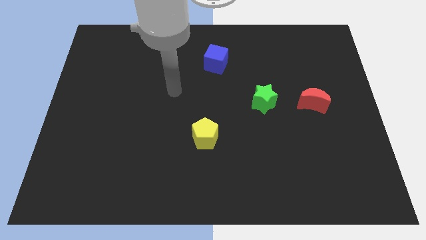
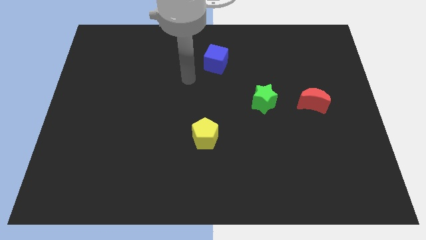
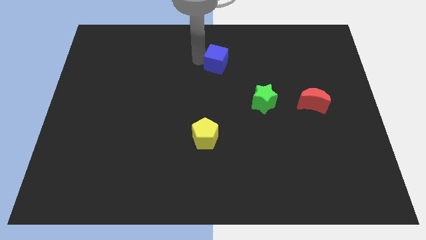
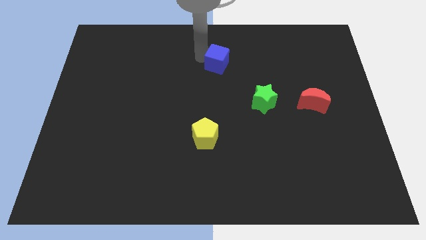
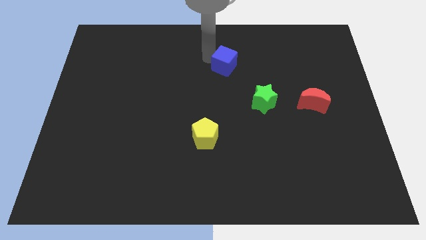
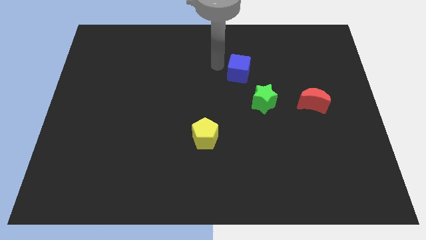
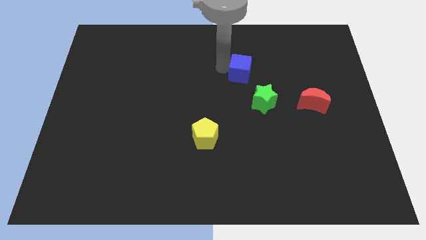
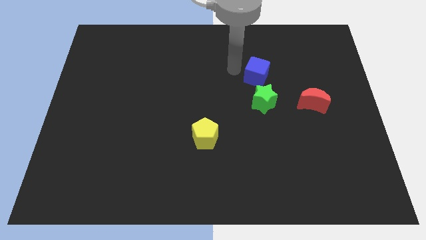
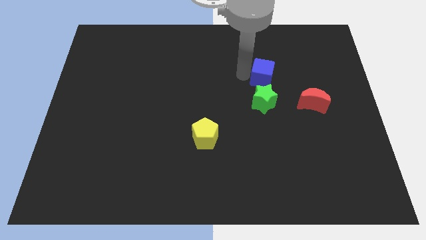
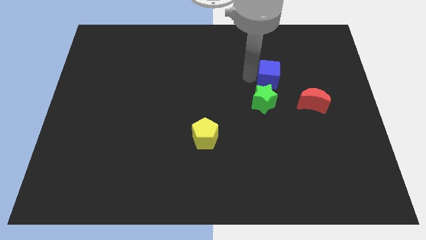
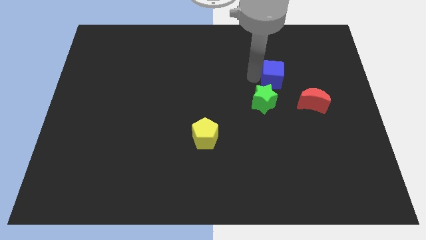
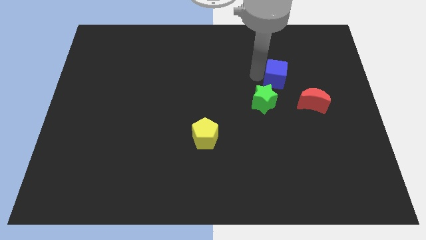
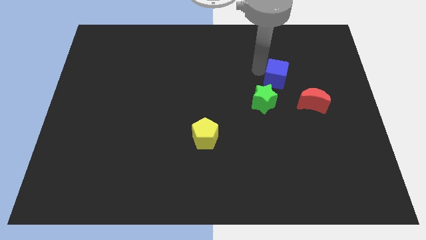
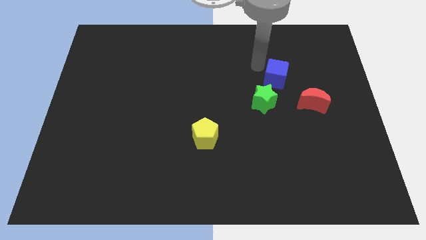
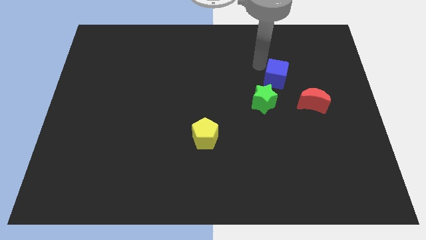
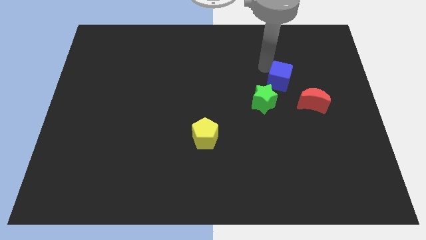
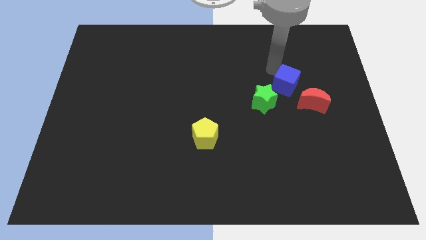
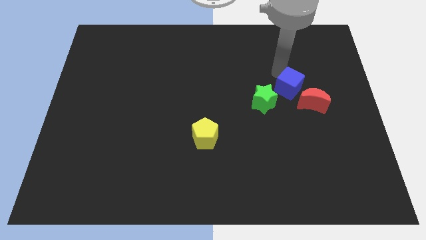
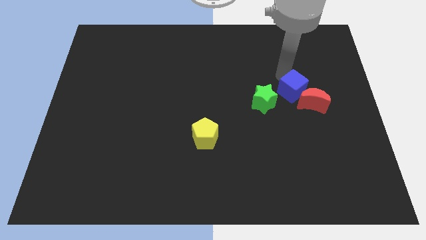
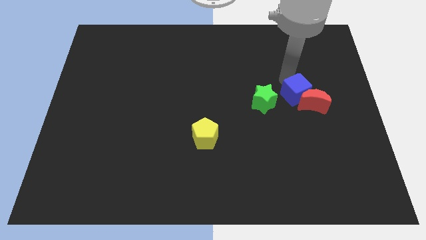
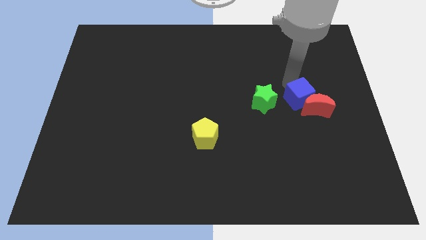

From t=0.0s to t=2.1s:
slide the blue cube next to the moon

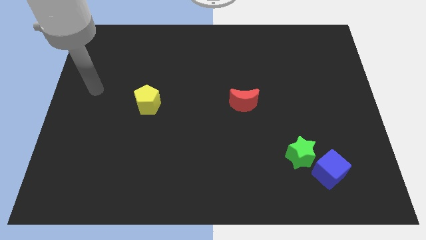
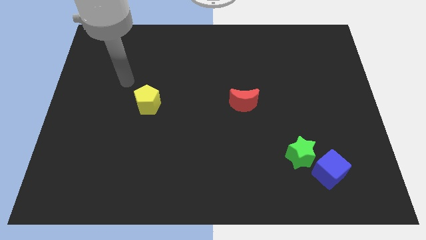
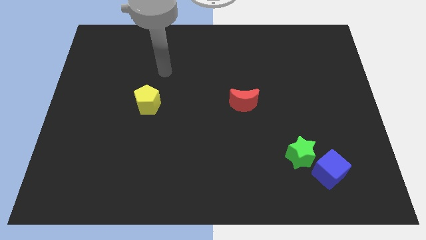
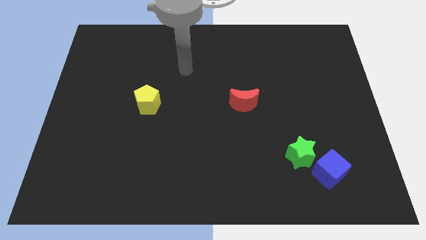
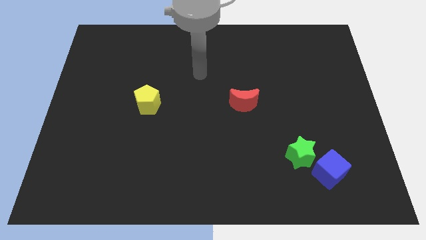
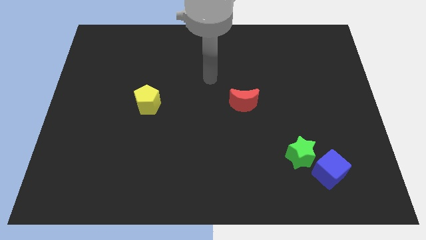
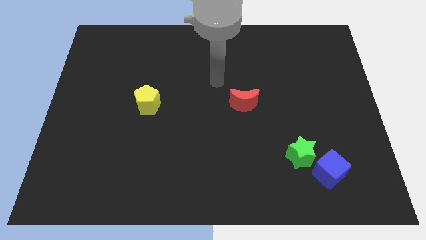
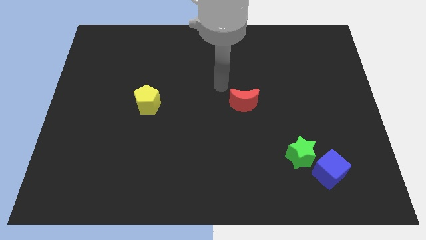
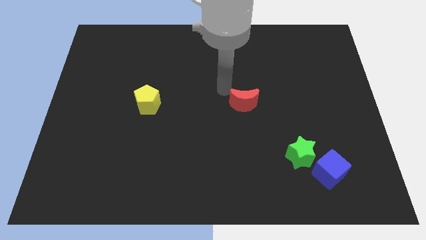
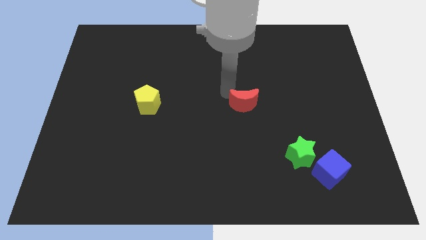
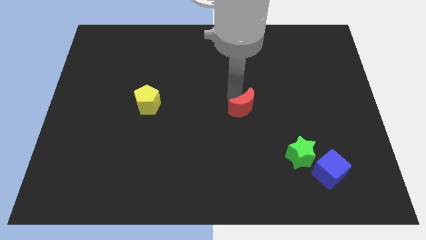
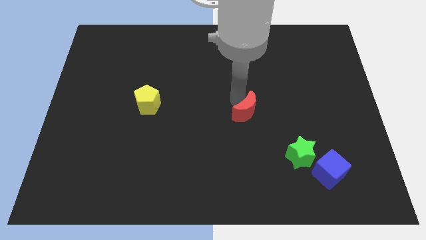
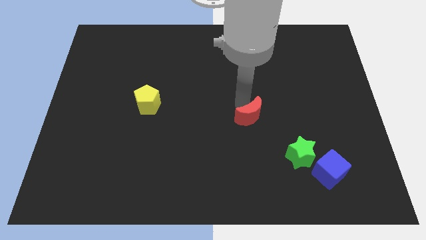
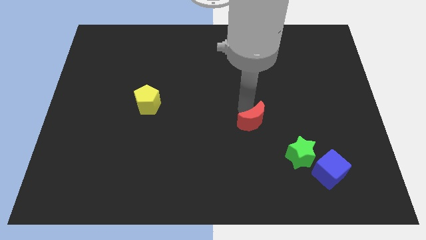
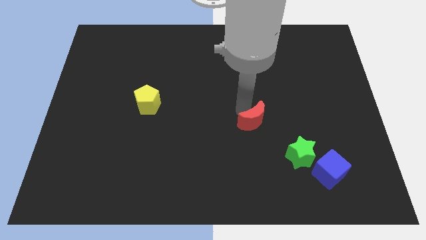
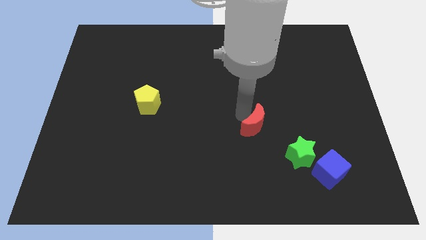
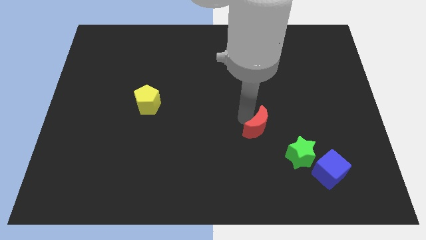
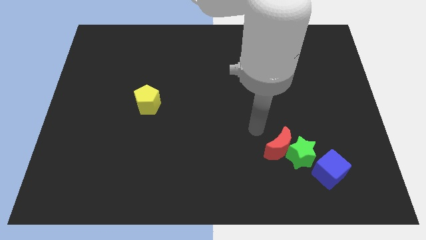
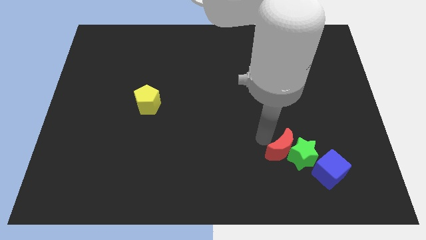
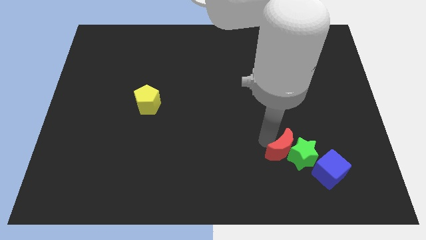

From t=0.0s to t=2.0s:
push the red moon next to the star

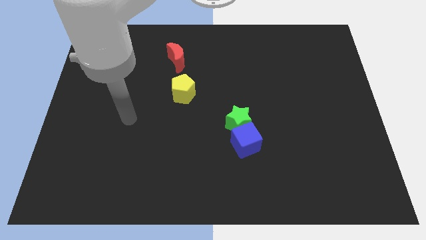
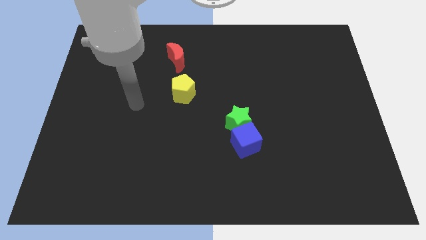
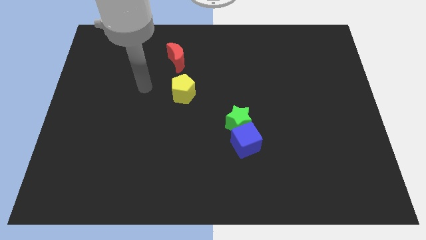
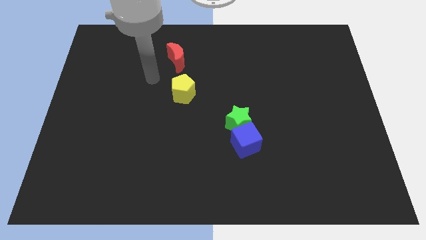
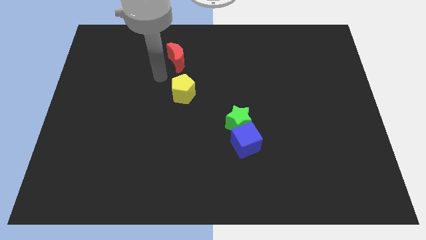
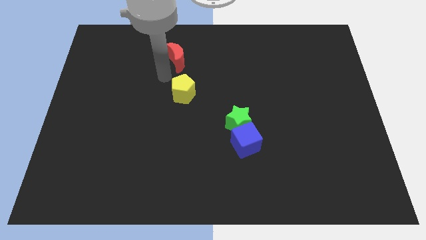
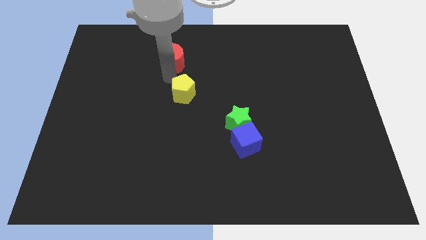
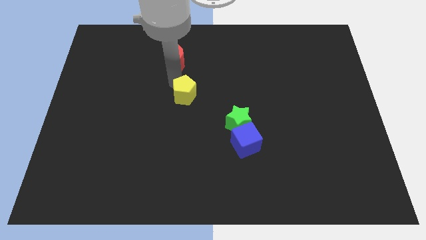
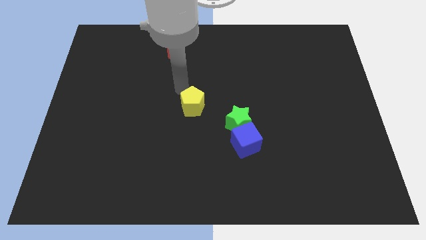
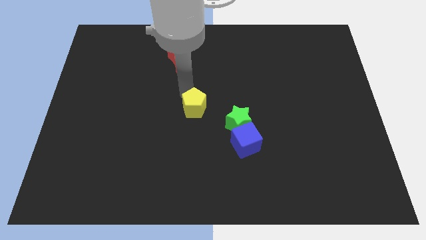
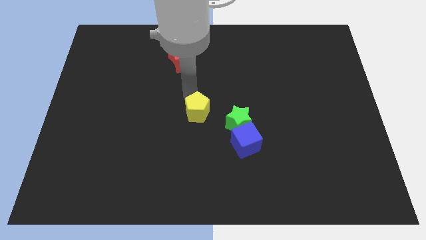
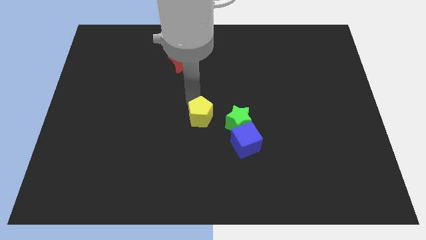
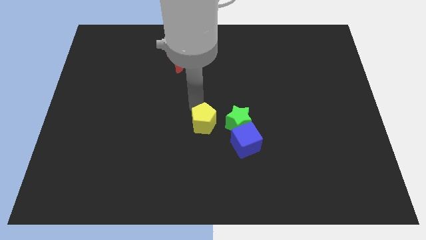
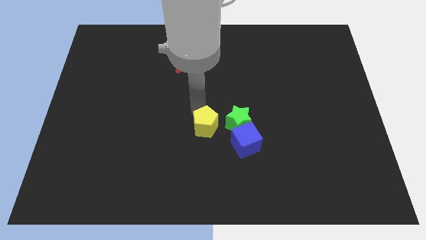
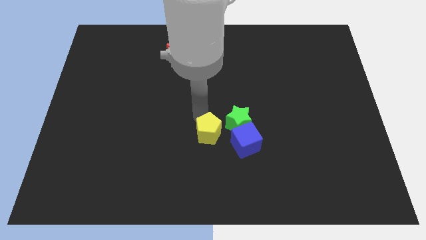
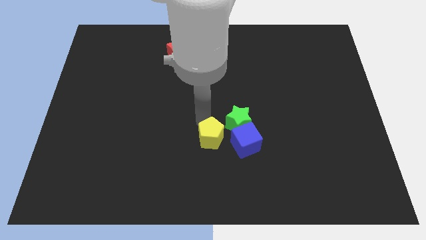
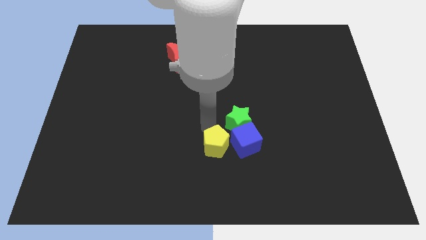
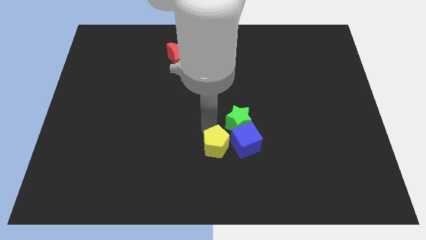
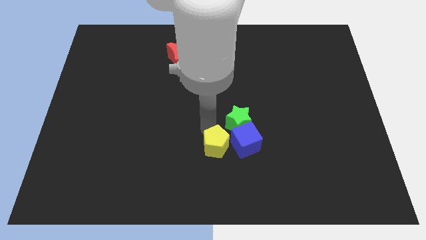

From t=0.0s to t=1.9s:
slide the yellow pentagon close to the blue cube

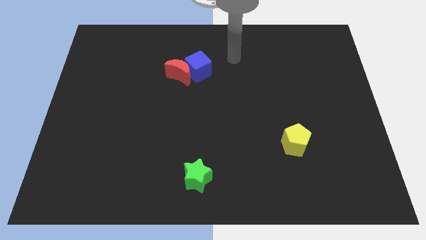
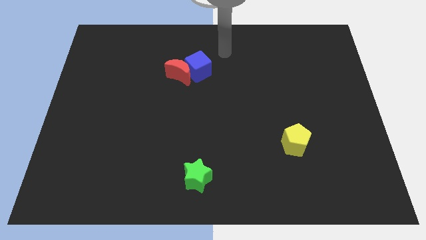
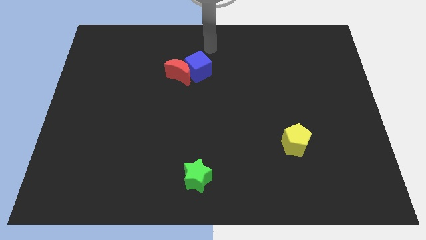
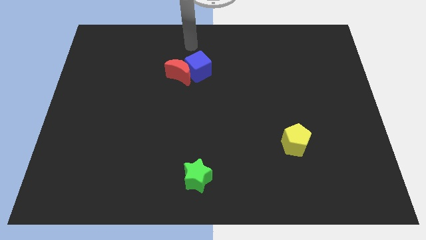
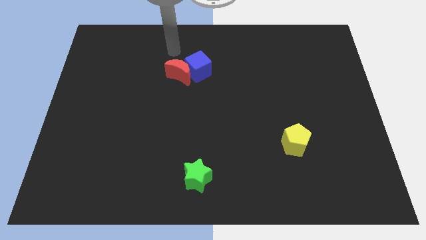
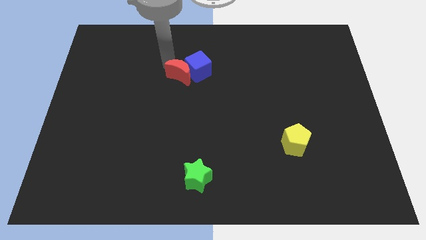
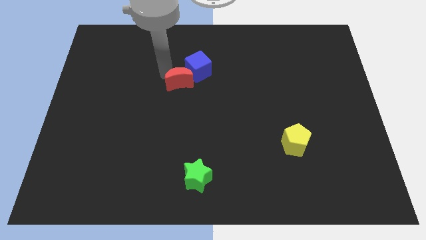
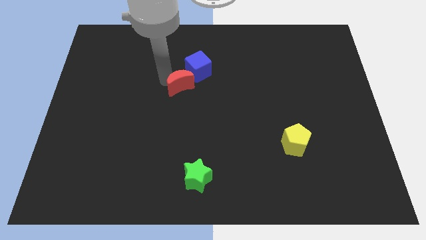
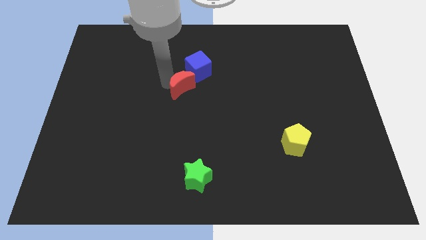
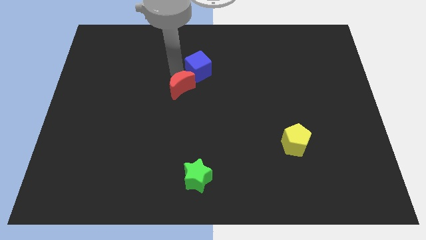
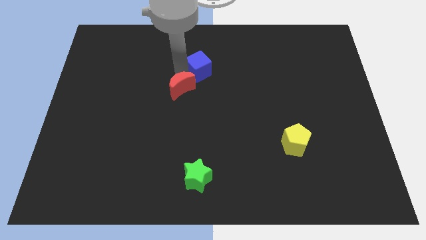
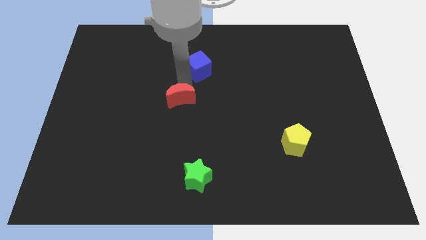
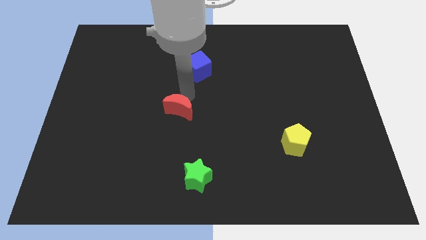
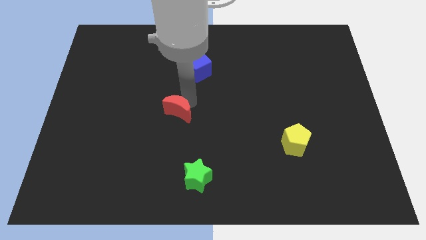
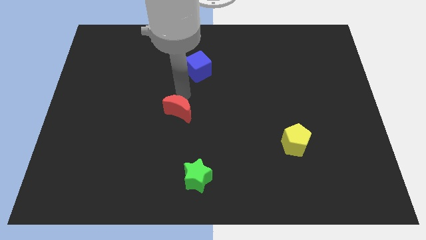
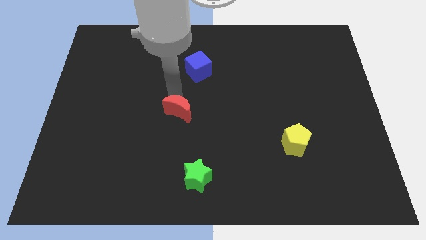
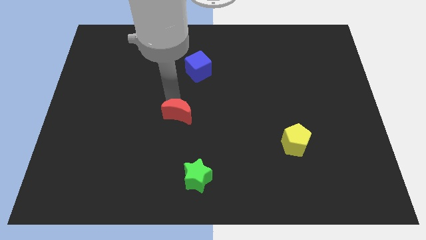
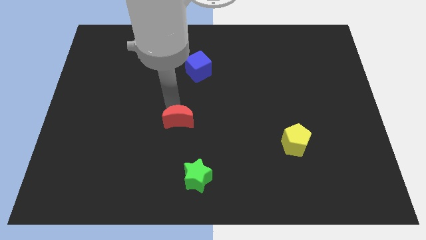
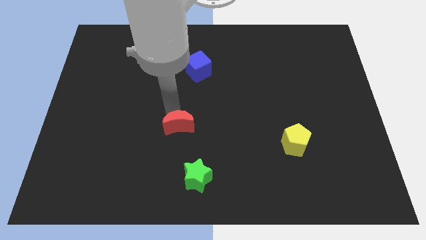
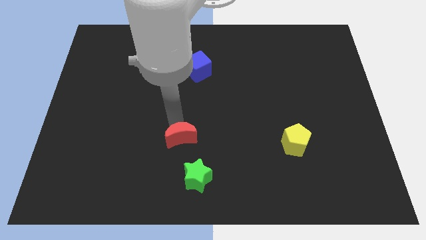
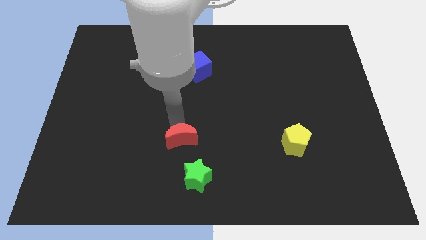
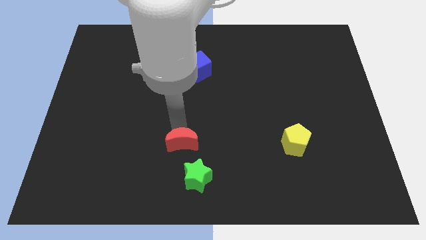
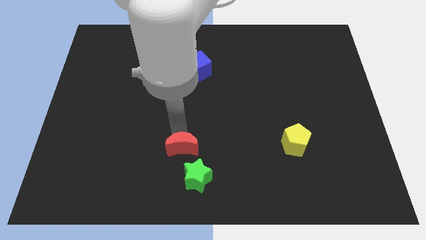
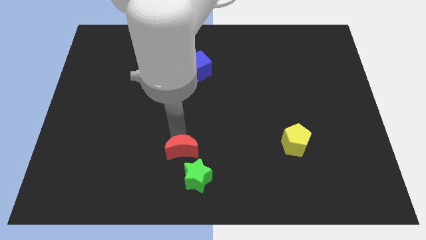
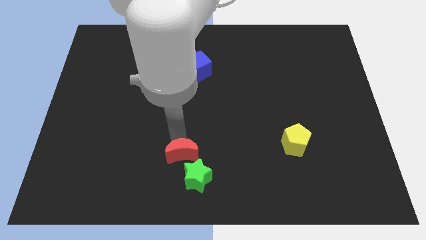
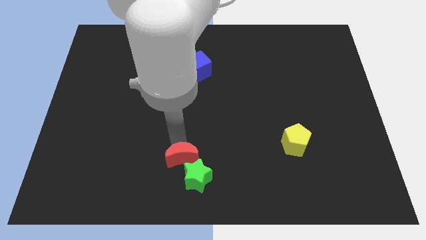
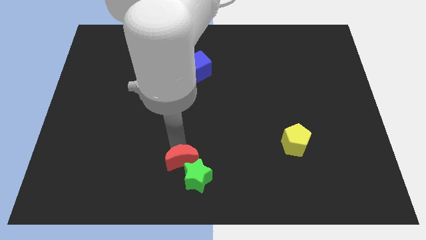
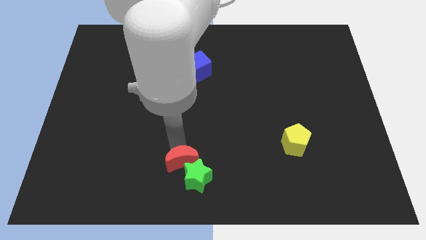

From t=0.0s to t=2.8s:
push the red moon towards the green star
